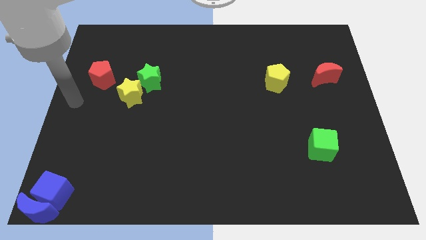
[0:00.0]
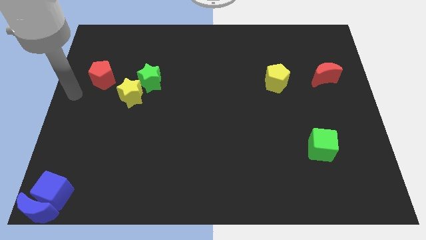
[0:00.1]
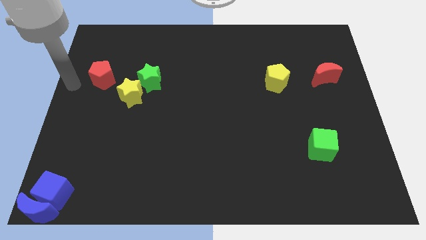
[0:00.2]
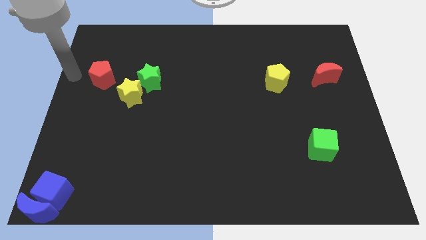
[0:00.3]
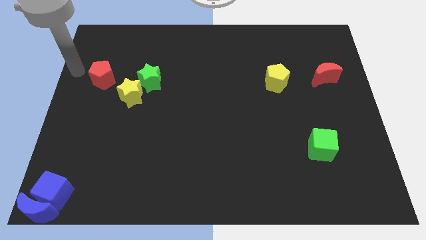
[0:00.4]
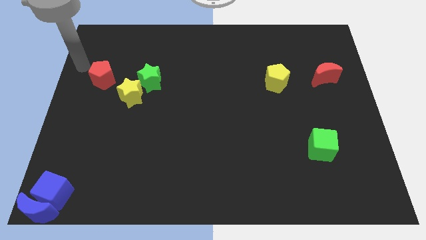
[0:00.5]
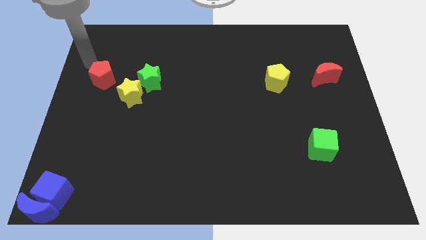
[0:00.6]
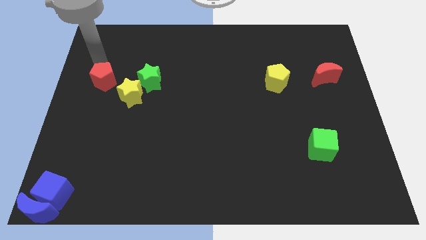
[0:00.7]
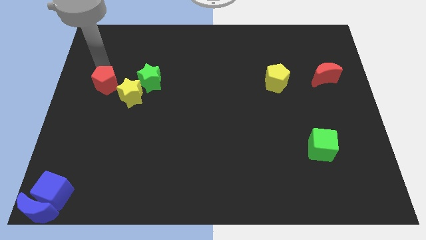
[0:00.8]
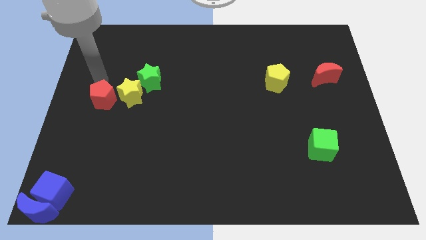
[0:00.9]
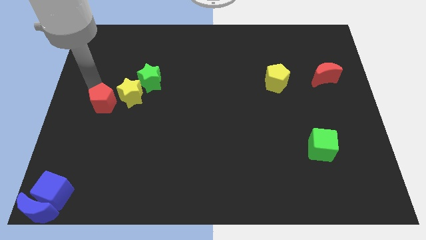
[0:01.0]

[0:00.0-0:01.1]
slide red pentagon down to the left of yellow star

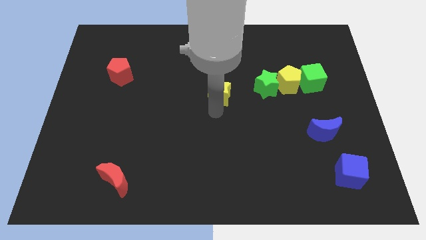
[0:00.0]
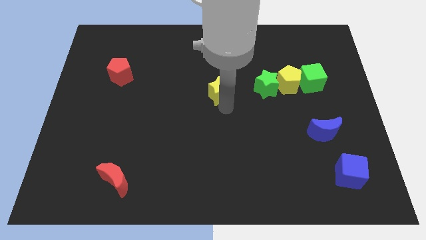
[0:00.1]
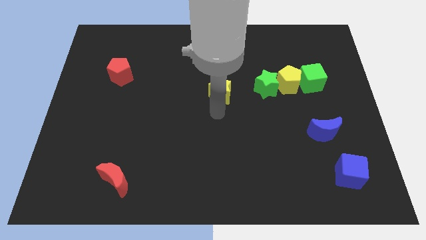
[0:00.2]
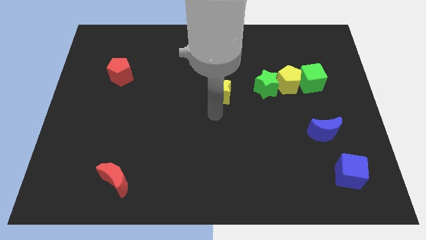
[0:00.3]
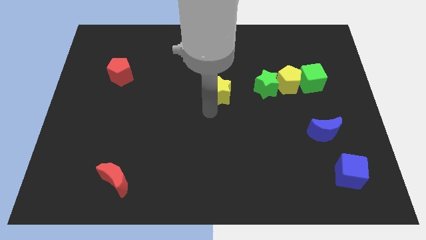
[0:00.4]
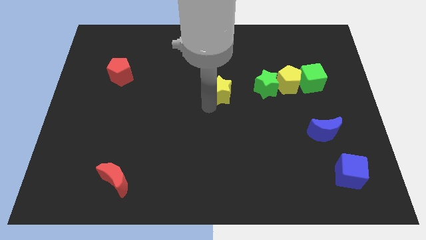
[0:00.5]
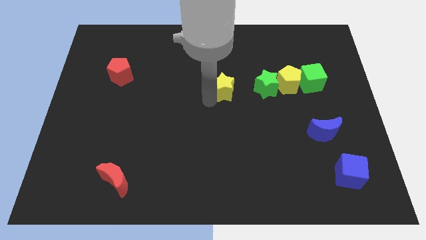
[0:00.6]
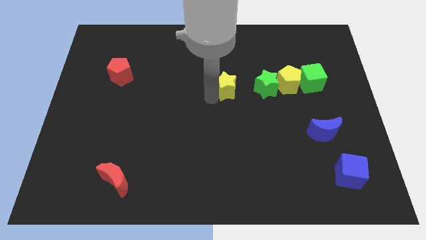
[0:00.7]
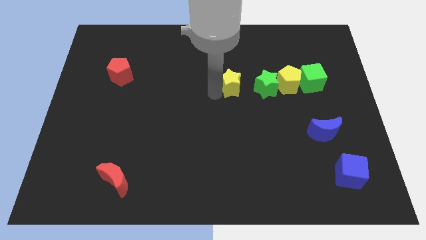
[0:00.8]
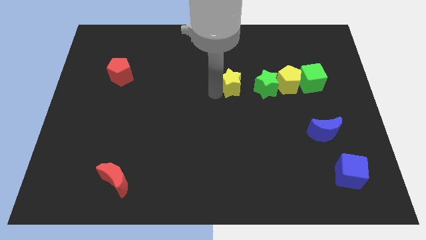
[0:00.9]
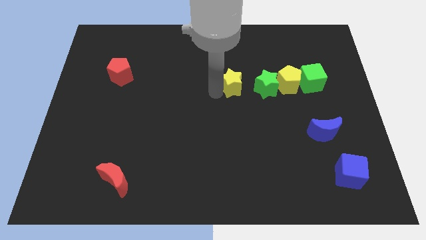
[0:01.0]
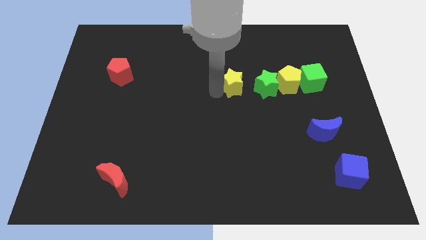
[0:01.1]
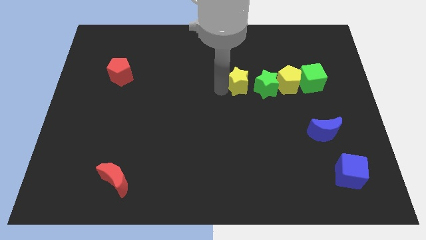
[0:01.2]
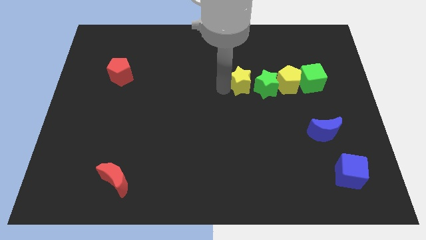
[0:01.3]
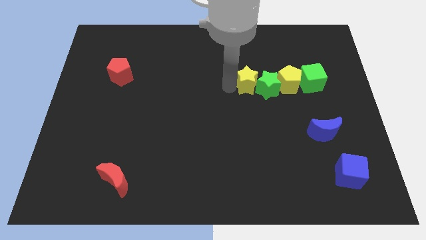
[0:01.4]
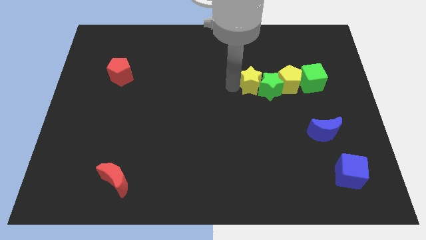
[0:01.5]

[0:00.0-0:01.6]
push the yellow star into the green star

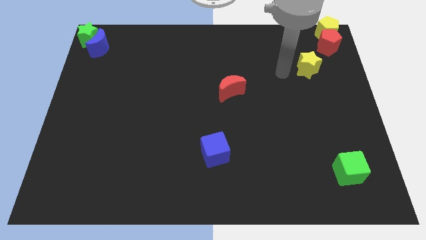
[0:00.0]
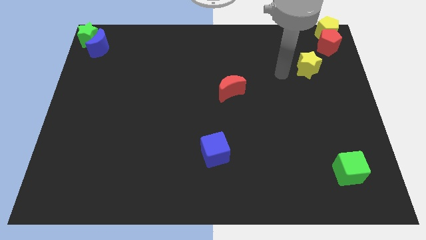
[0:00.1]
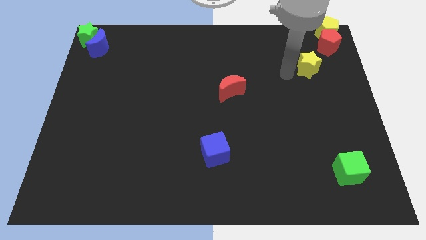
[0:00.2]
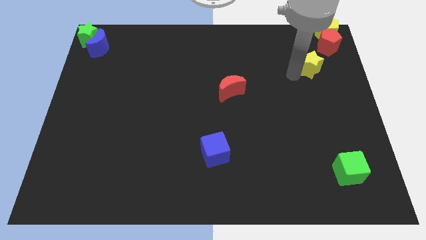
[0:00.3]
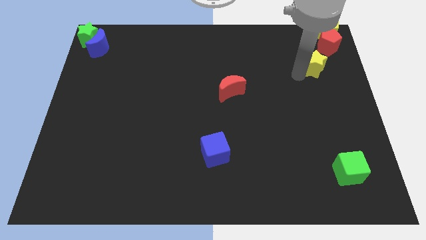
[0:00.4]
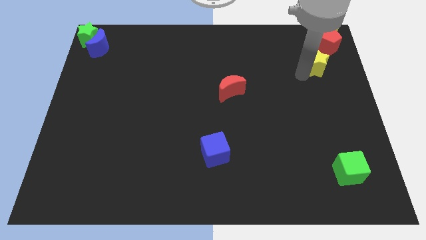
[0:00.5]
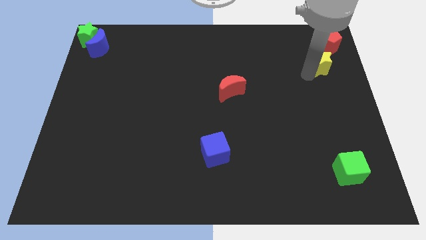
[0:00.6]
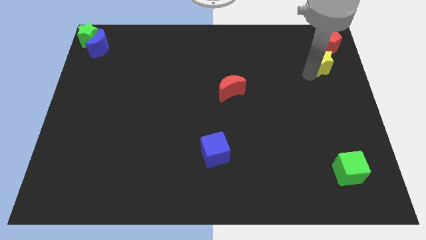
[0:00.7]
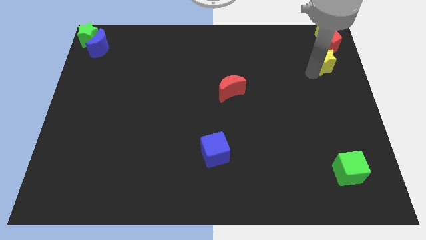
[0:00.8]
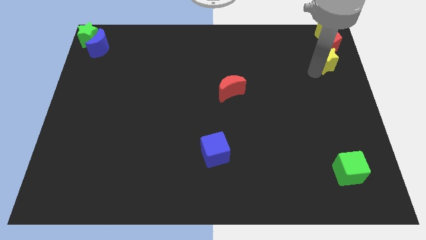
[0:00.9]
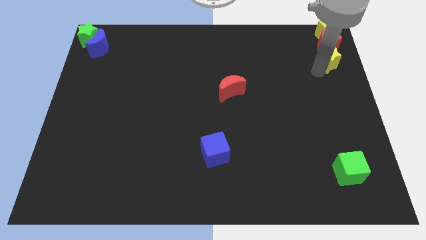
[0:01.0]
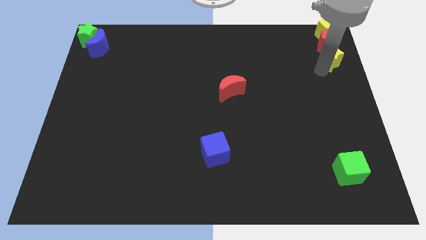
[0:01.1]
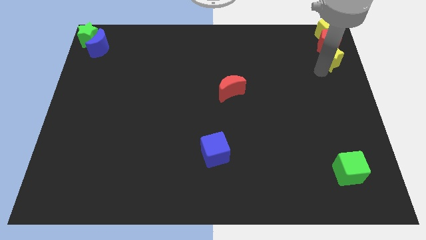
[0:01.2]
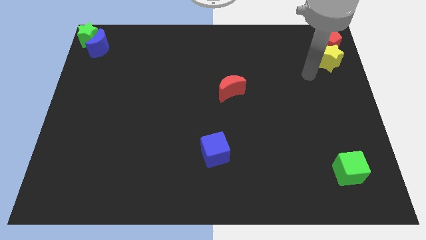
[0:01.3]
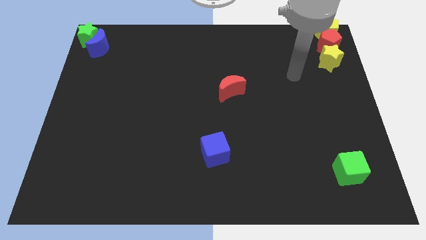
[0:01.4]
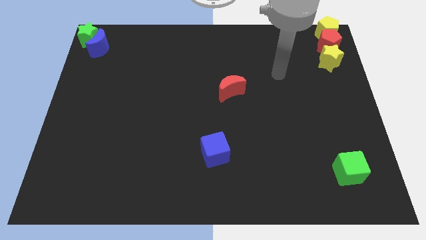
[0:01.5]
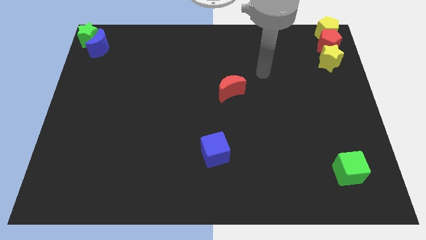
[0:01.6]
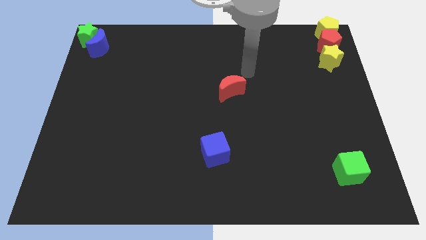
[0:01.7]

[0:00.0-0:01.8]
place the yellow star at the bottom of the red pentagon

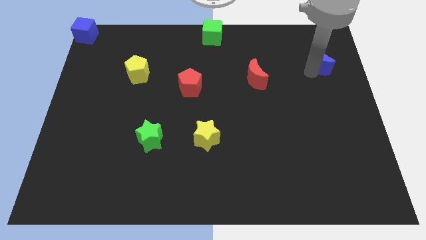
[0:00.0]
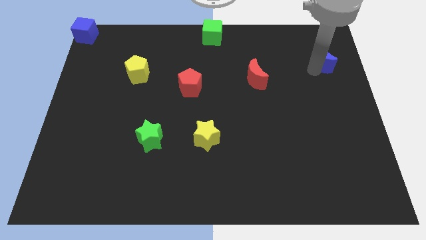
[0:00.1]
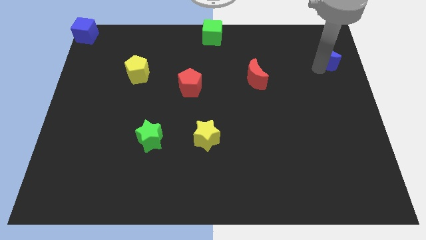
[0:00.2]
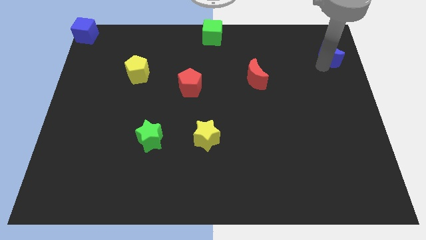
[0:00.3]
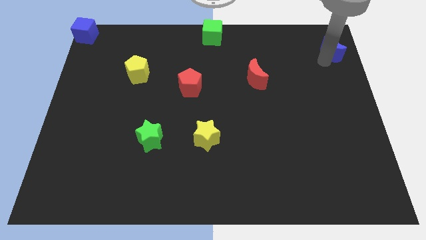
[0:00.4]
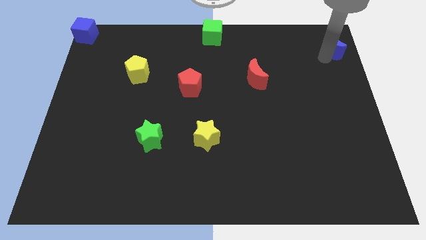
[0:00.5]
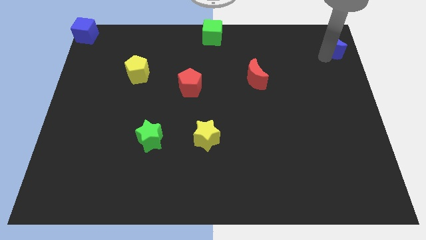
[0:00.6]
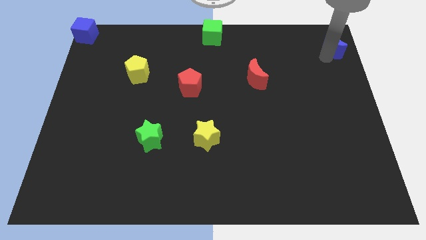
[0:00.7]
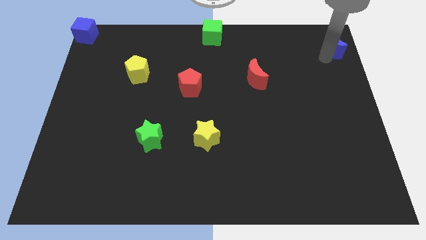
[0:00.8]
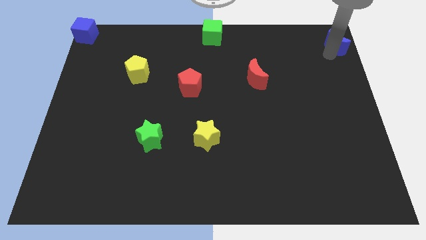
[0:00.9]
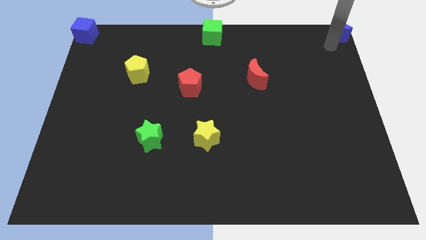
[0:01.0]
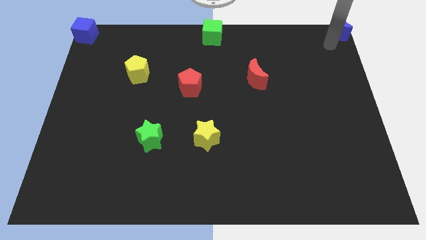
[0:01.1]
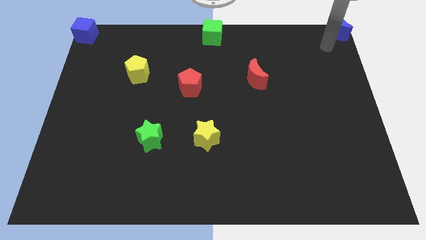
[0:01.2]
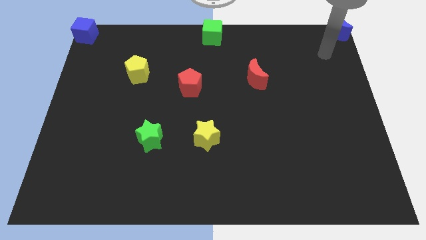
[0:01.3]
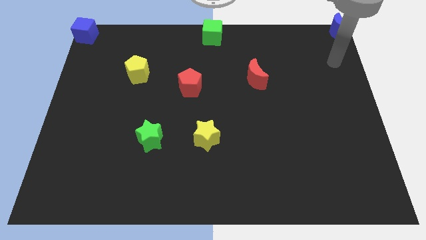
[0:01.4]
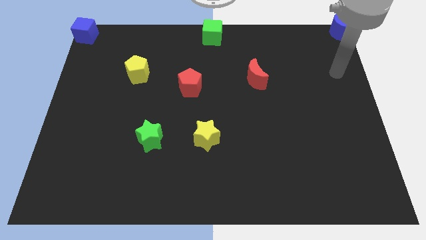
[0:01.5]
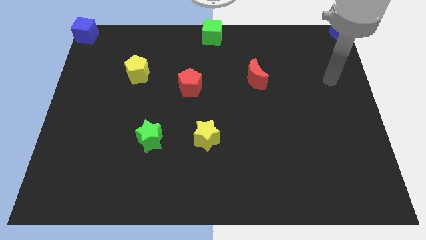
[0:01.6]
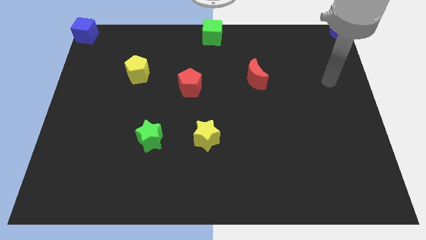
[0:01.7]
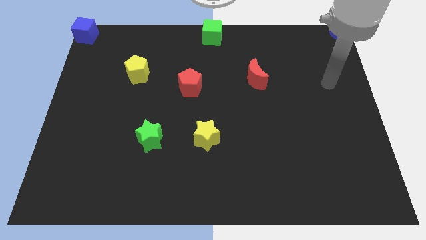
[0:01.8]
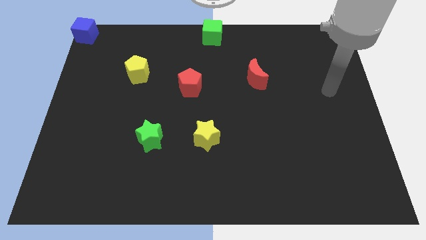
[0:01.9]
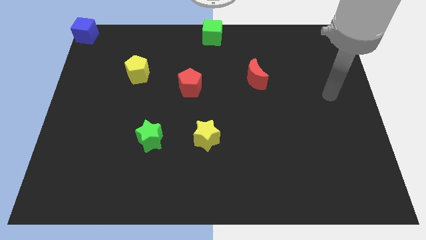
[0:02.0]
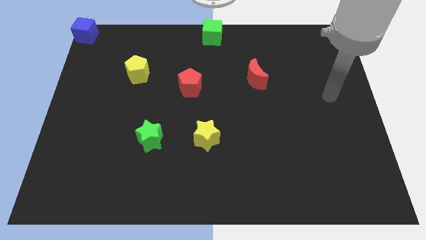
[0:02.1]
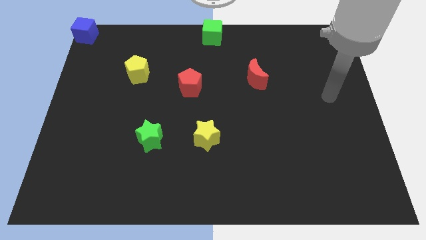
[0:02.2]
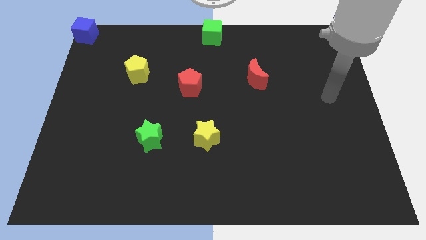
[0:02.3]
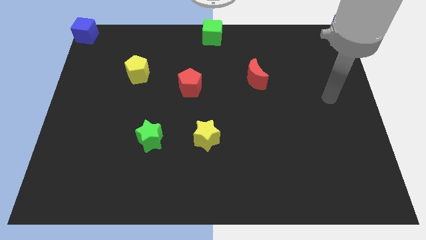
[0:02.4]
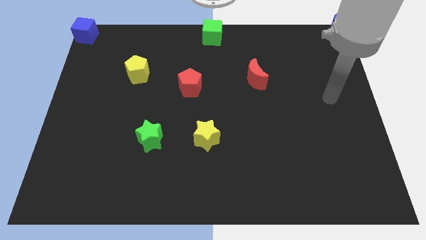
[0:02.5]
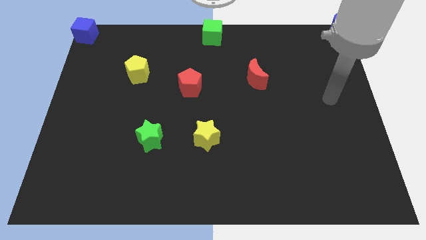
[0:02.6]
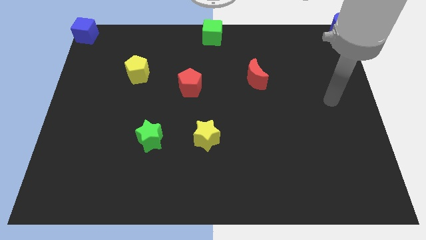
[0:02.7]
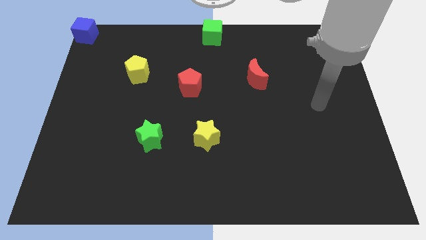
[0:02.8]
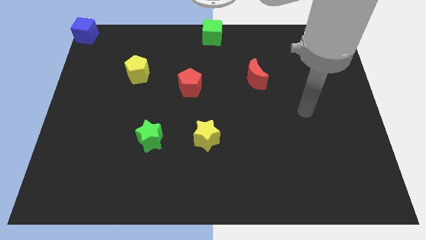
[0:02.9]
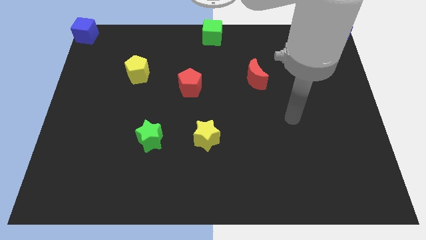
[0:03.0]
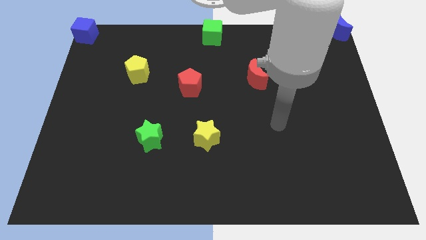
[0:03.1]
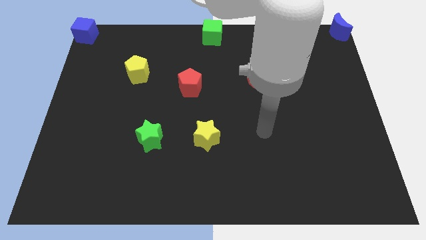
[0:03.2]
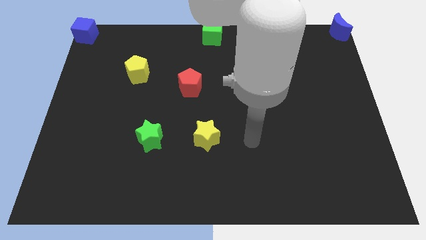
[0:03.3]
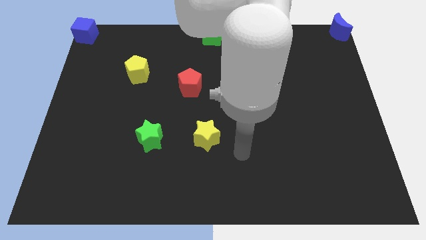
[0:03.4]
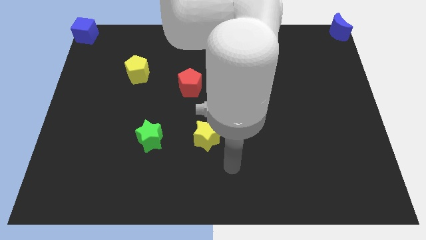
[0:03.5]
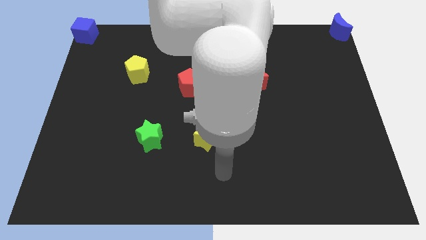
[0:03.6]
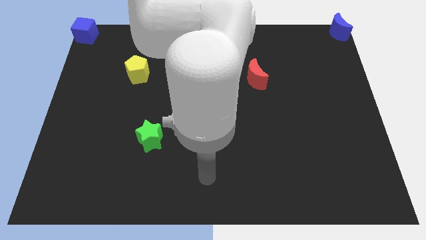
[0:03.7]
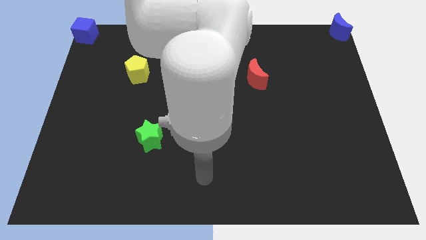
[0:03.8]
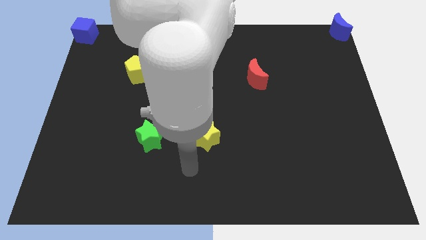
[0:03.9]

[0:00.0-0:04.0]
place the blue crescent to the top right

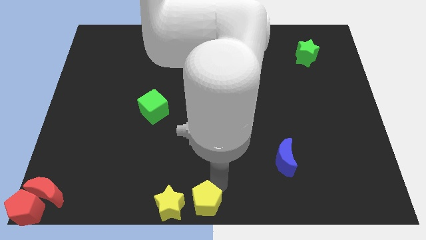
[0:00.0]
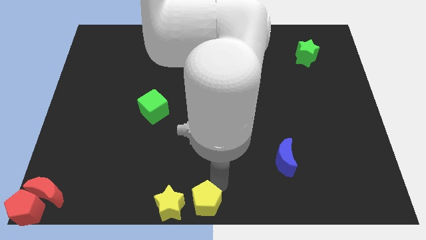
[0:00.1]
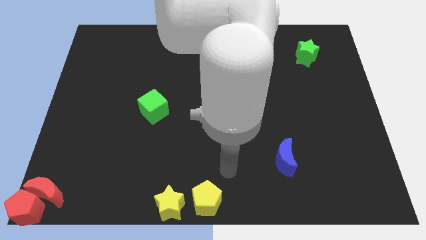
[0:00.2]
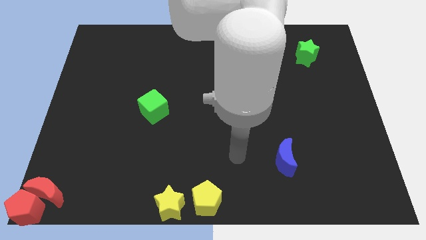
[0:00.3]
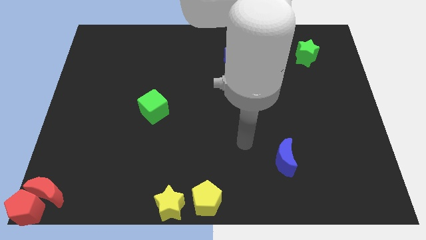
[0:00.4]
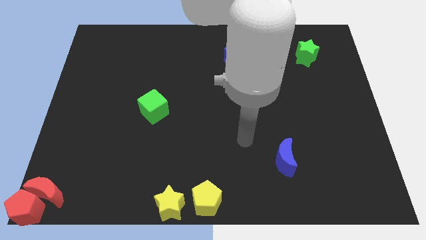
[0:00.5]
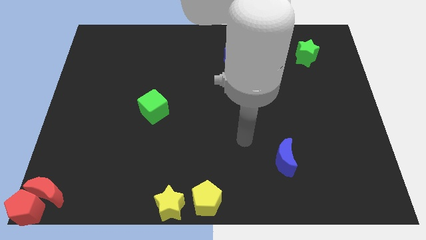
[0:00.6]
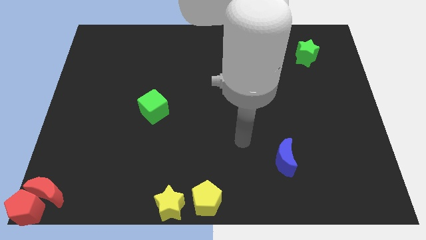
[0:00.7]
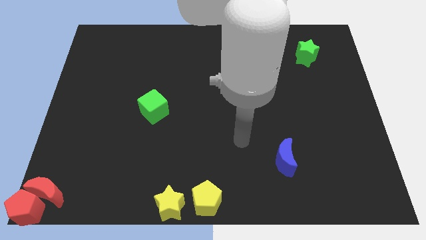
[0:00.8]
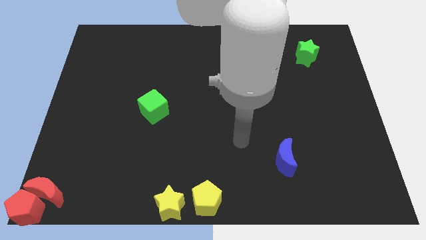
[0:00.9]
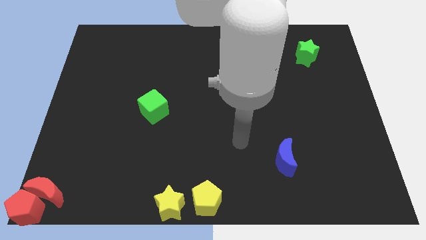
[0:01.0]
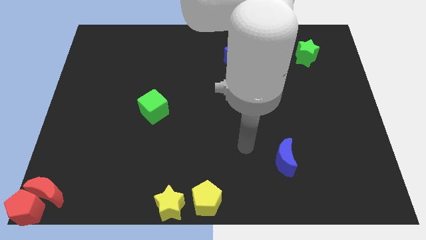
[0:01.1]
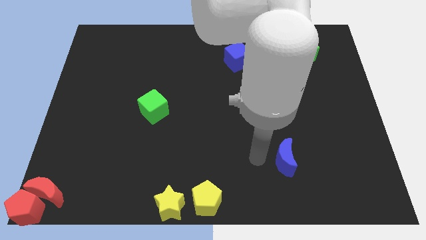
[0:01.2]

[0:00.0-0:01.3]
point your arm to the left side of blue moon
